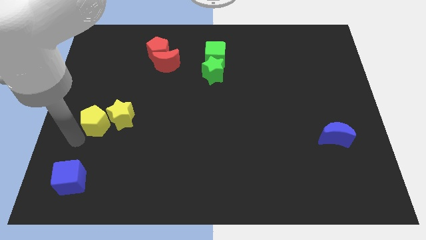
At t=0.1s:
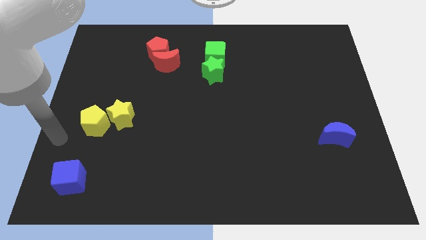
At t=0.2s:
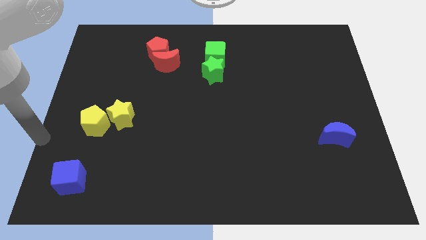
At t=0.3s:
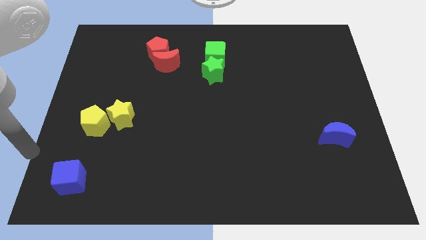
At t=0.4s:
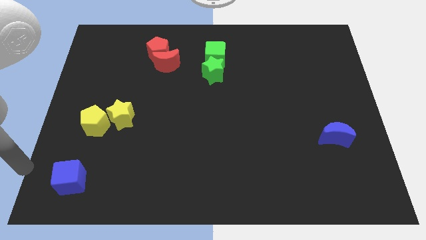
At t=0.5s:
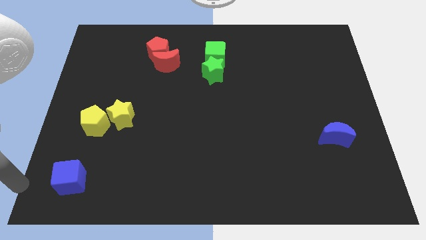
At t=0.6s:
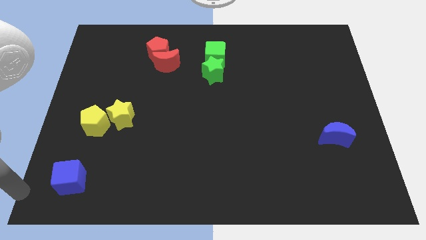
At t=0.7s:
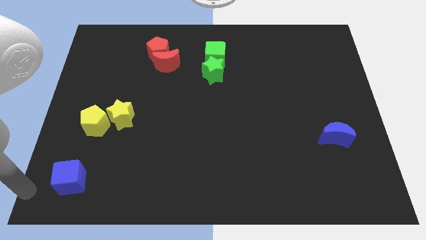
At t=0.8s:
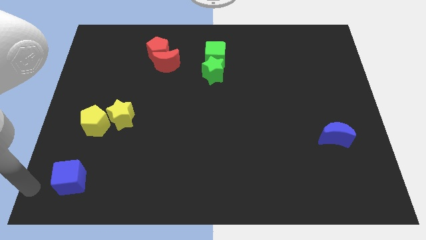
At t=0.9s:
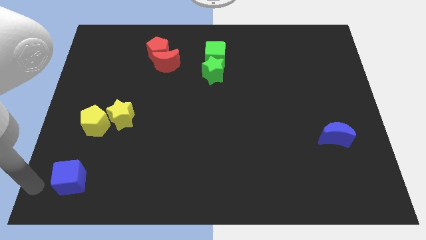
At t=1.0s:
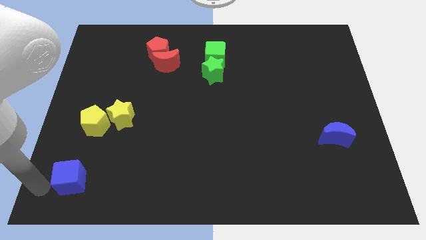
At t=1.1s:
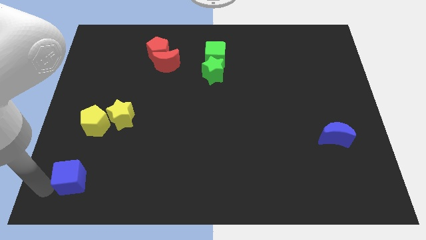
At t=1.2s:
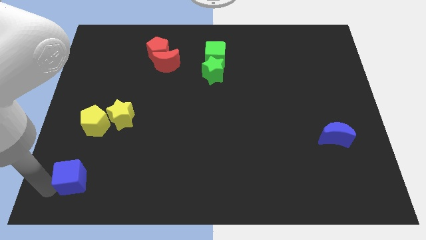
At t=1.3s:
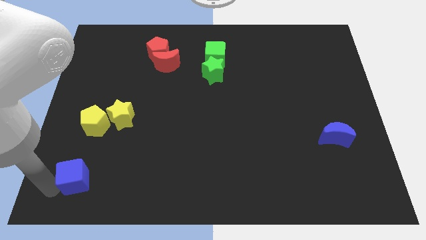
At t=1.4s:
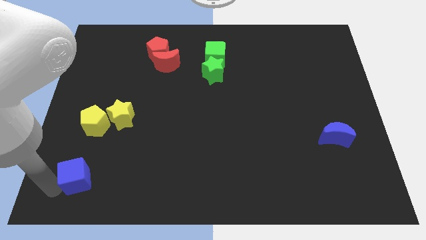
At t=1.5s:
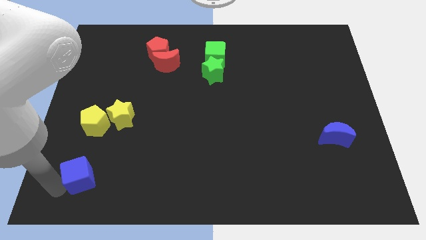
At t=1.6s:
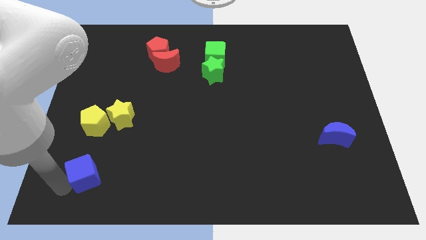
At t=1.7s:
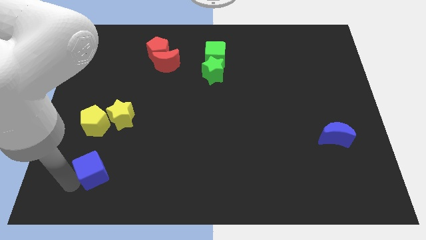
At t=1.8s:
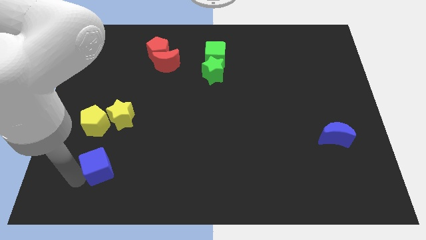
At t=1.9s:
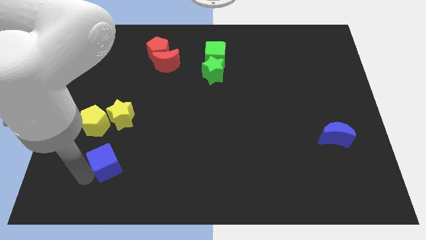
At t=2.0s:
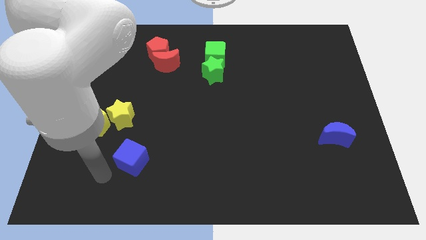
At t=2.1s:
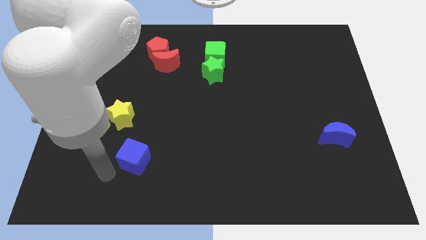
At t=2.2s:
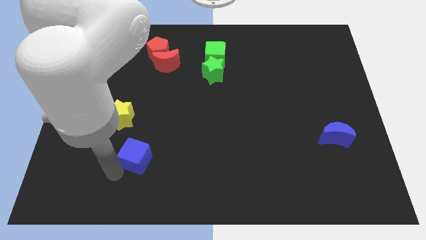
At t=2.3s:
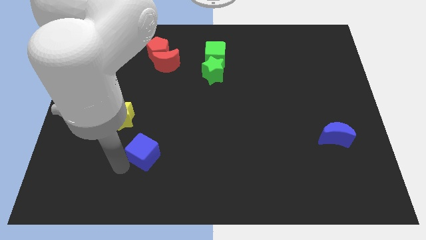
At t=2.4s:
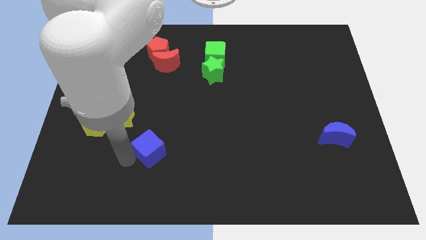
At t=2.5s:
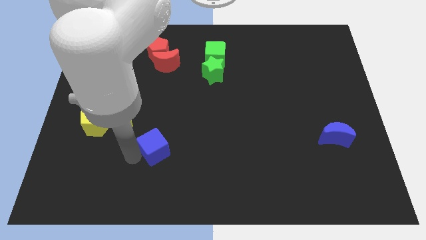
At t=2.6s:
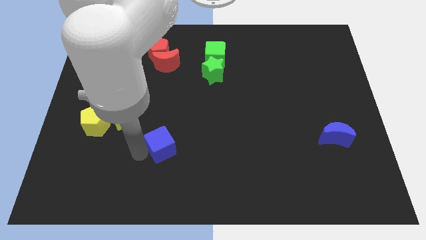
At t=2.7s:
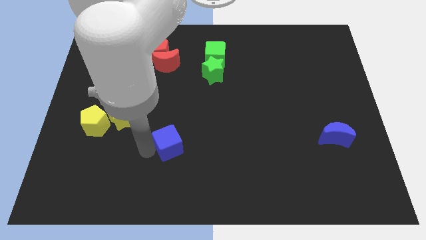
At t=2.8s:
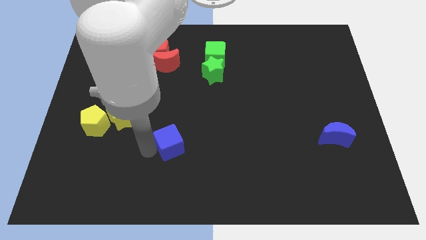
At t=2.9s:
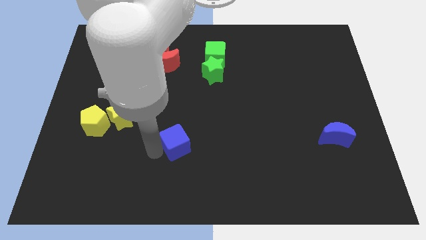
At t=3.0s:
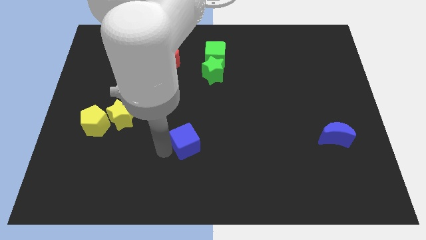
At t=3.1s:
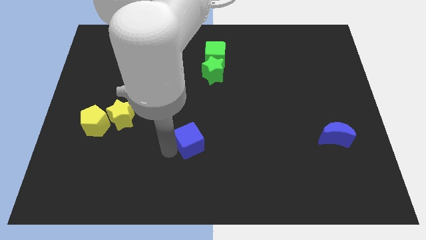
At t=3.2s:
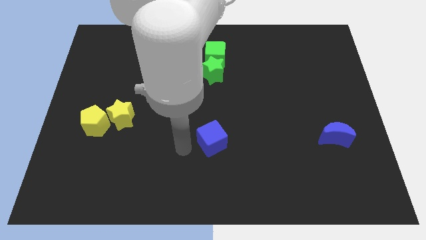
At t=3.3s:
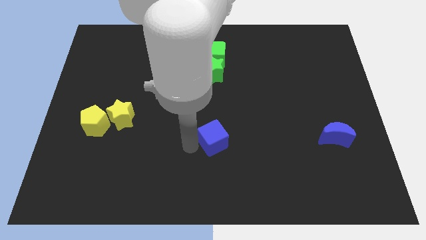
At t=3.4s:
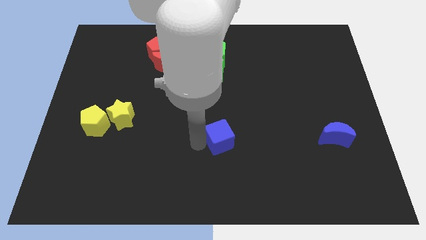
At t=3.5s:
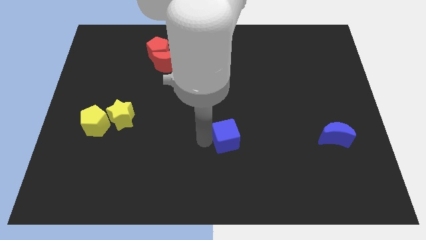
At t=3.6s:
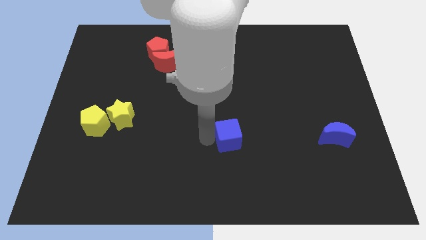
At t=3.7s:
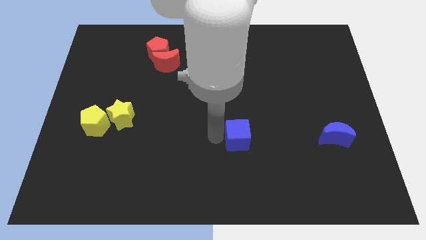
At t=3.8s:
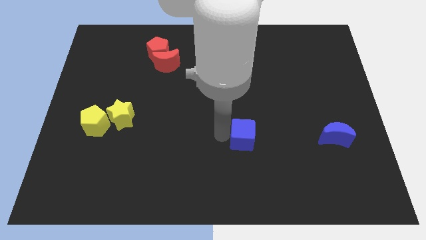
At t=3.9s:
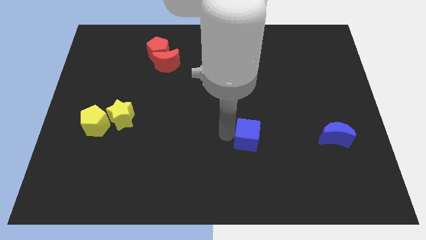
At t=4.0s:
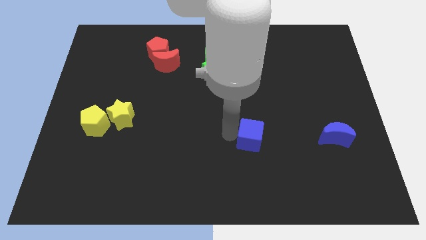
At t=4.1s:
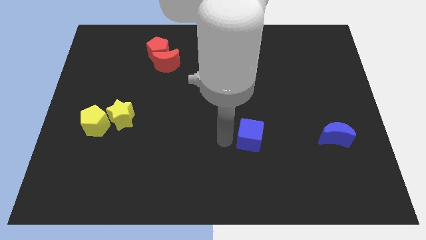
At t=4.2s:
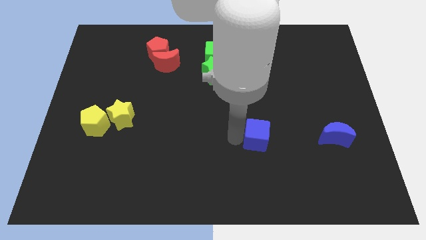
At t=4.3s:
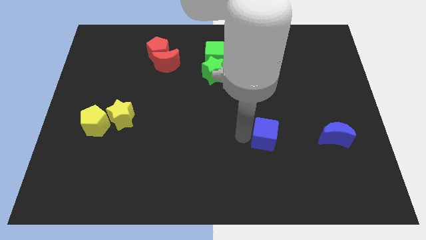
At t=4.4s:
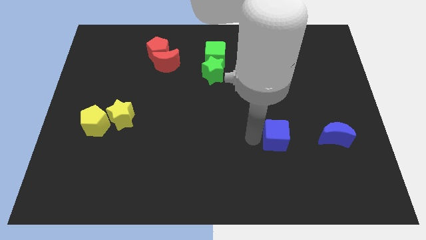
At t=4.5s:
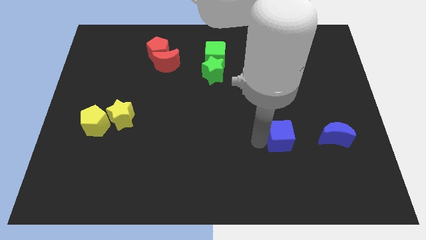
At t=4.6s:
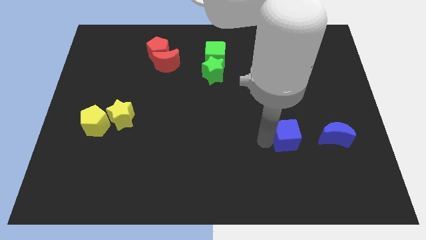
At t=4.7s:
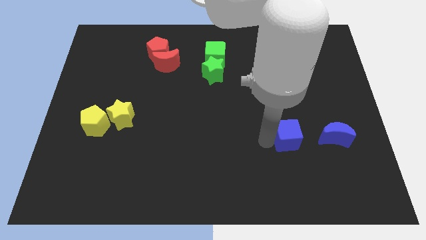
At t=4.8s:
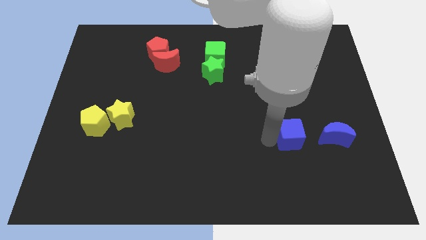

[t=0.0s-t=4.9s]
place the blue cube vertically below the green star

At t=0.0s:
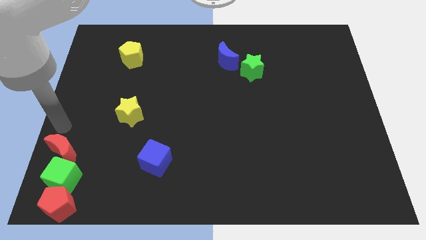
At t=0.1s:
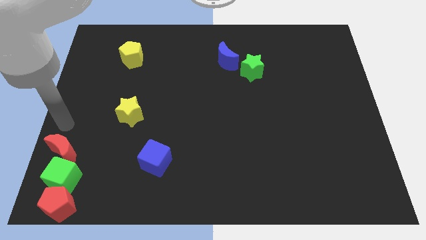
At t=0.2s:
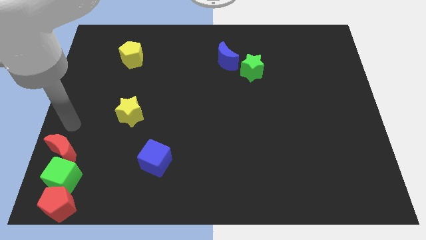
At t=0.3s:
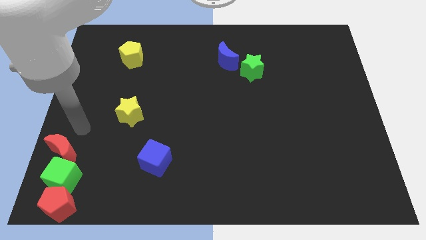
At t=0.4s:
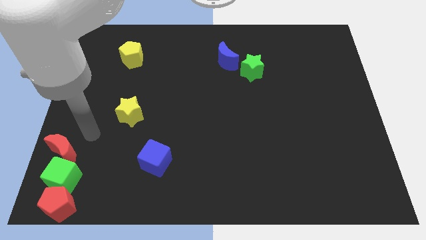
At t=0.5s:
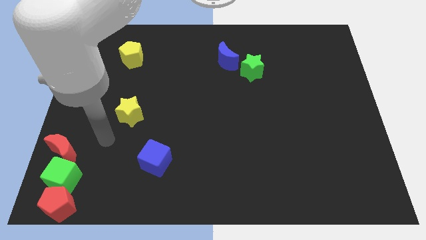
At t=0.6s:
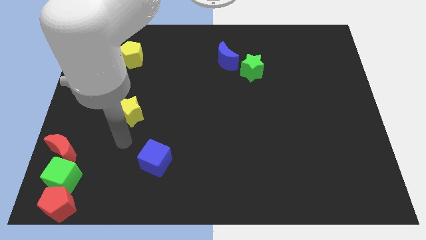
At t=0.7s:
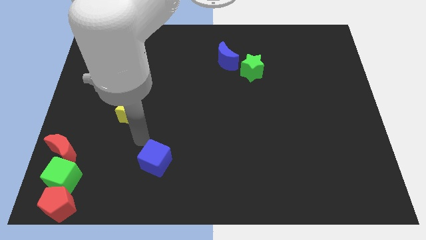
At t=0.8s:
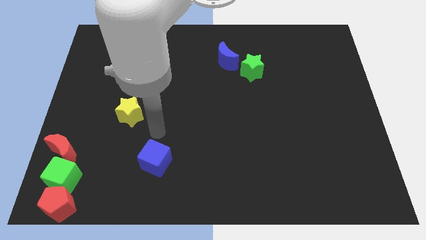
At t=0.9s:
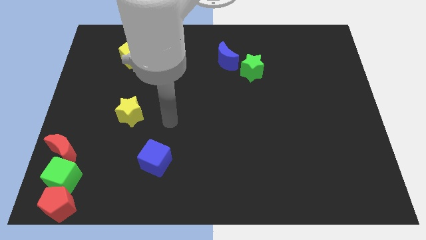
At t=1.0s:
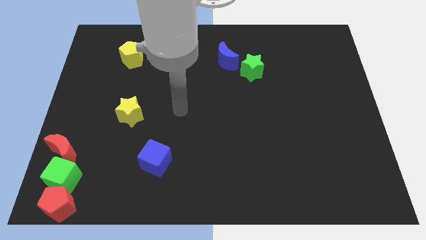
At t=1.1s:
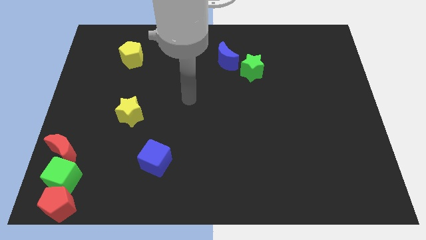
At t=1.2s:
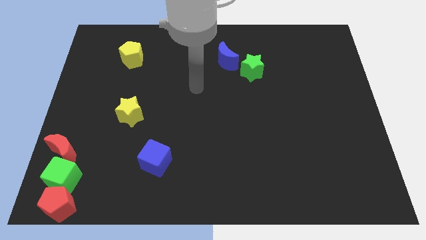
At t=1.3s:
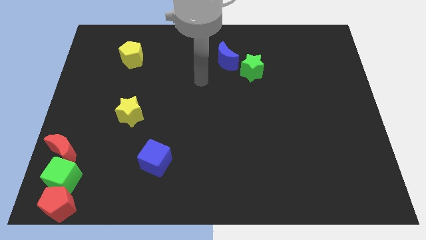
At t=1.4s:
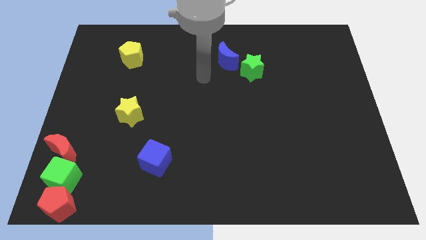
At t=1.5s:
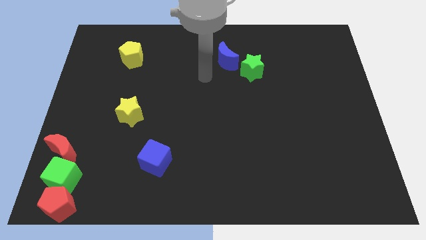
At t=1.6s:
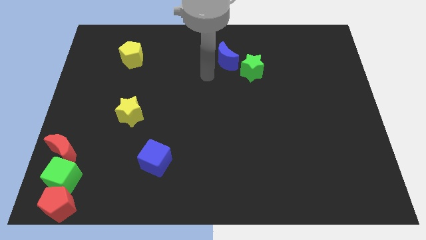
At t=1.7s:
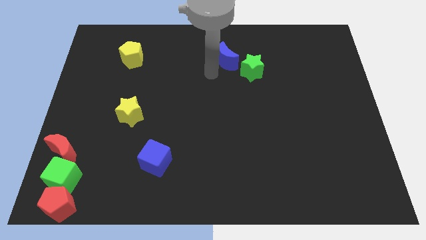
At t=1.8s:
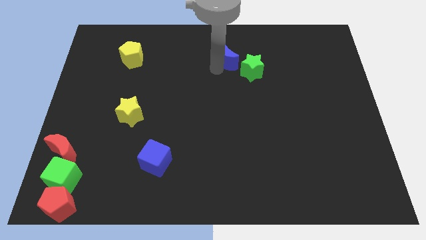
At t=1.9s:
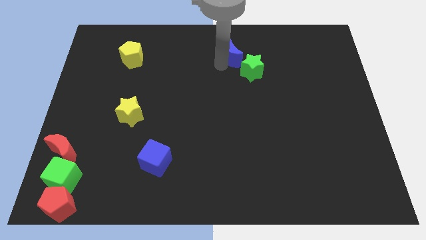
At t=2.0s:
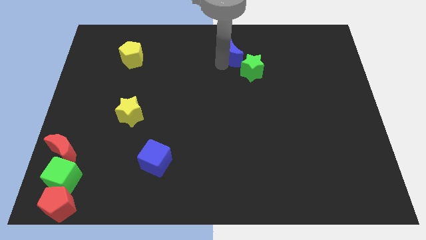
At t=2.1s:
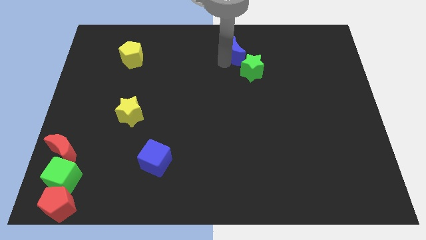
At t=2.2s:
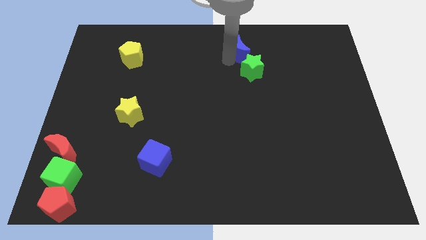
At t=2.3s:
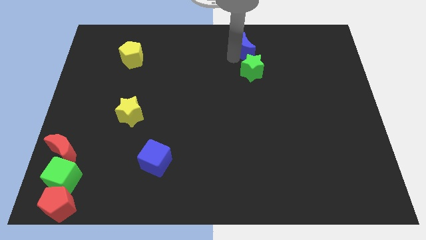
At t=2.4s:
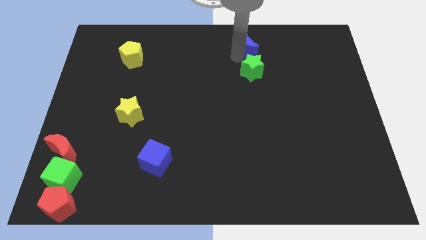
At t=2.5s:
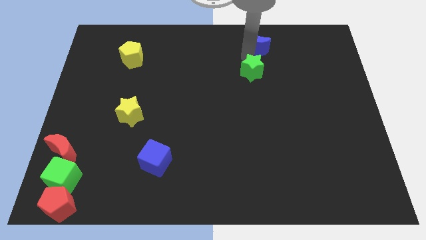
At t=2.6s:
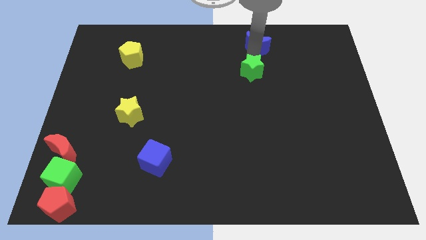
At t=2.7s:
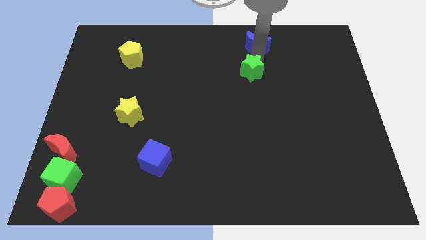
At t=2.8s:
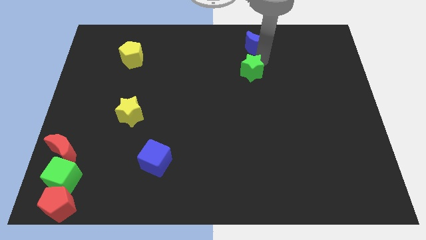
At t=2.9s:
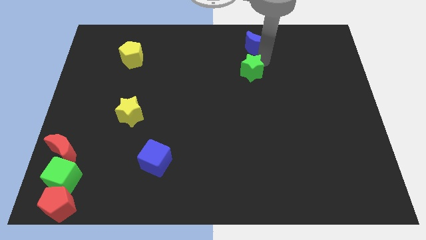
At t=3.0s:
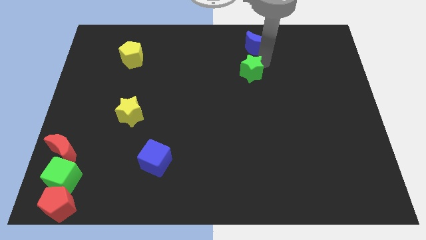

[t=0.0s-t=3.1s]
slide blue crescent to the top side of the green star

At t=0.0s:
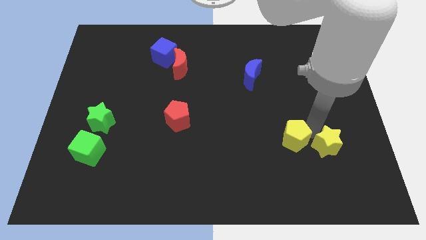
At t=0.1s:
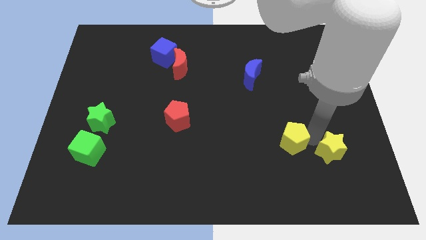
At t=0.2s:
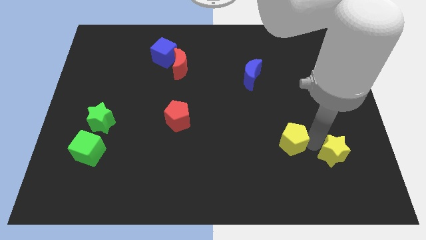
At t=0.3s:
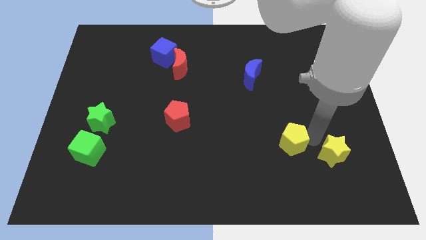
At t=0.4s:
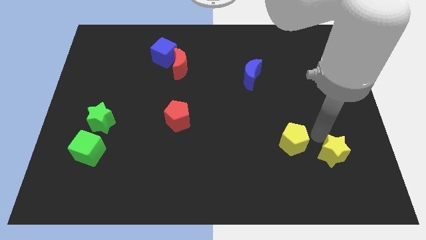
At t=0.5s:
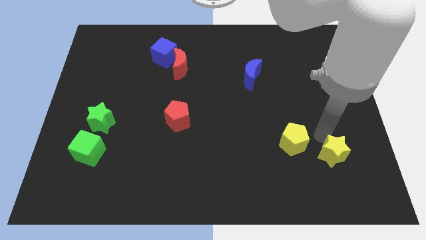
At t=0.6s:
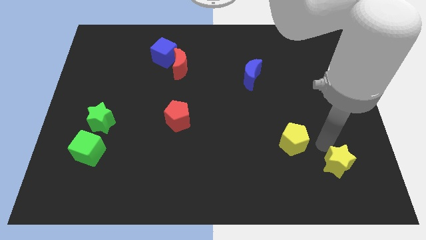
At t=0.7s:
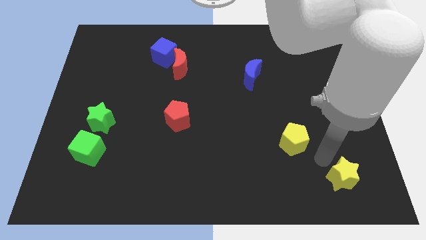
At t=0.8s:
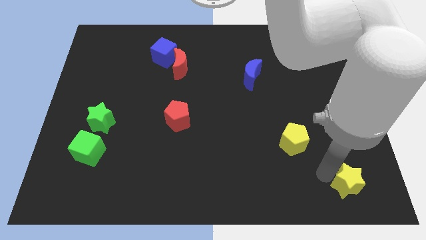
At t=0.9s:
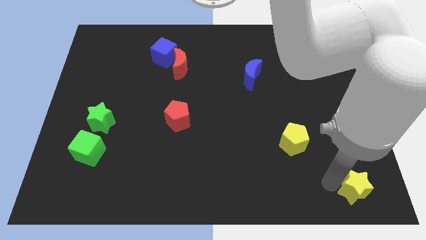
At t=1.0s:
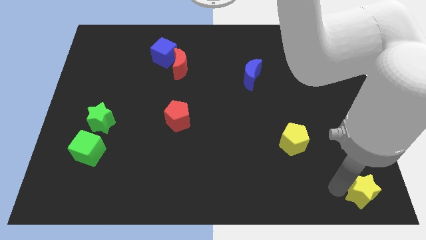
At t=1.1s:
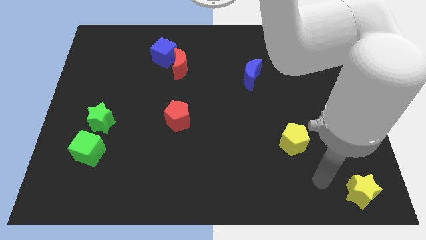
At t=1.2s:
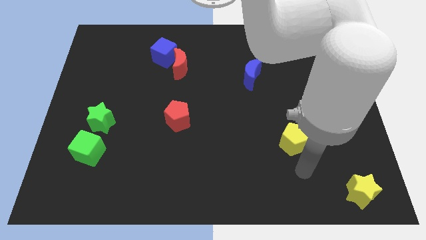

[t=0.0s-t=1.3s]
move the yellow star to the bottom right of the yellow pentagon
